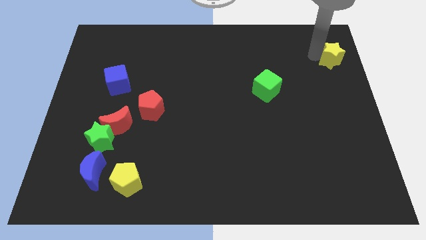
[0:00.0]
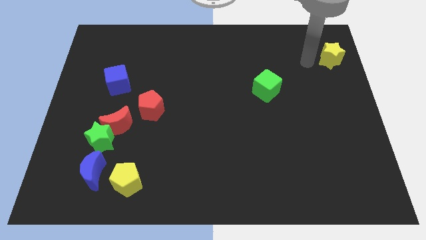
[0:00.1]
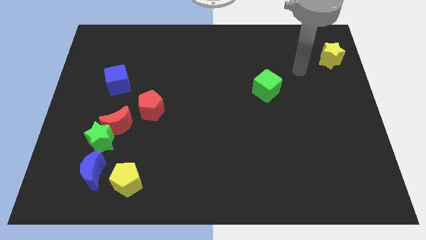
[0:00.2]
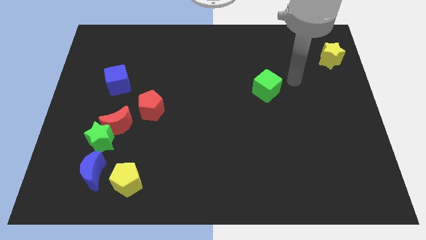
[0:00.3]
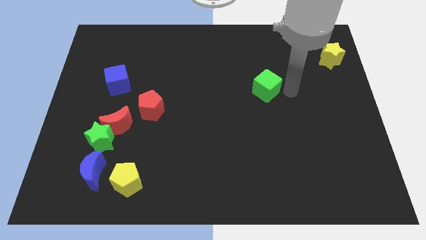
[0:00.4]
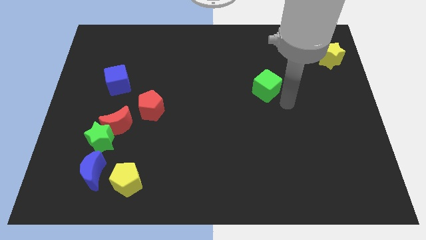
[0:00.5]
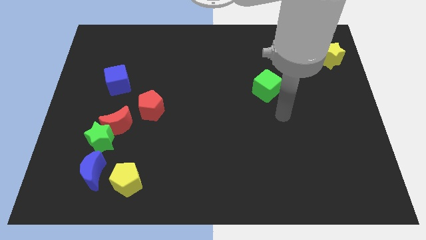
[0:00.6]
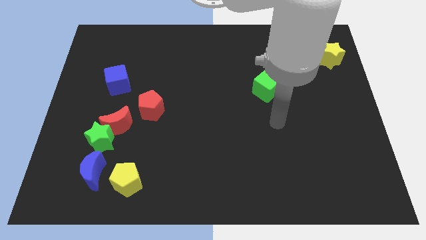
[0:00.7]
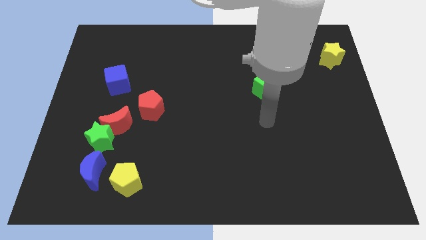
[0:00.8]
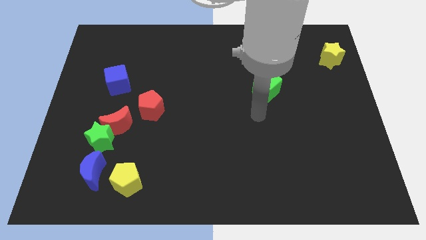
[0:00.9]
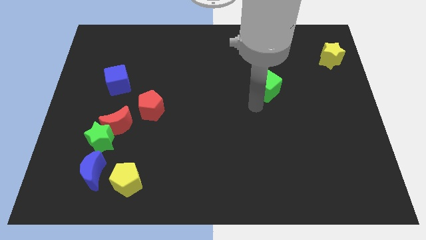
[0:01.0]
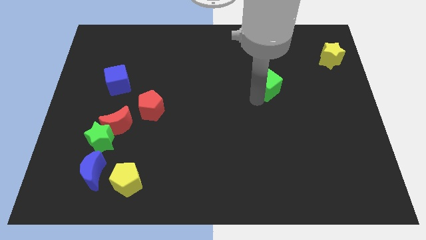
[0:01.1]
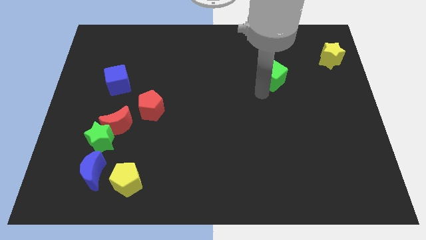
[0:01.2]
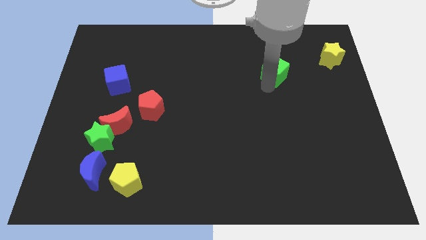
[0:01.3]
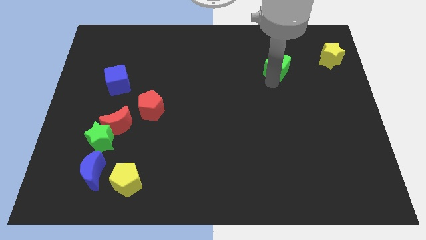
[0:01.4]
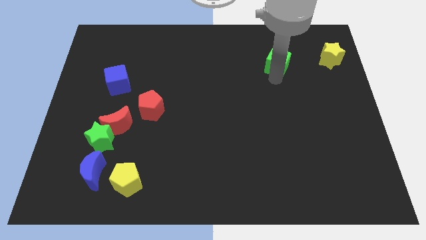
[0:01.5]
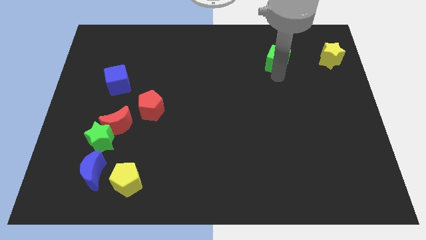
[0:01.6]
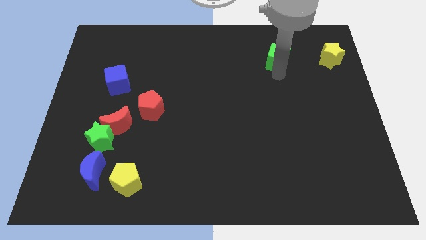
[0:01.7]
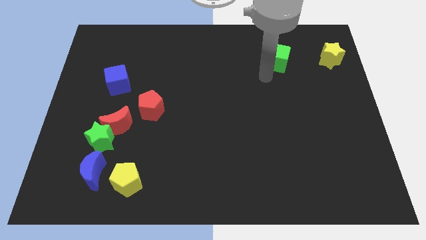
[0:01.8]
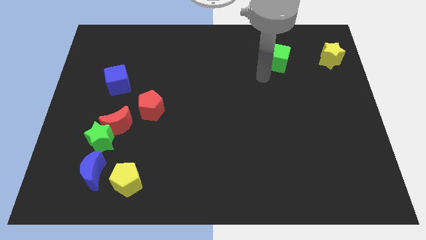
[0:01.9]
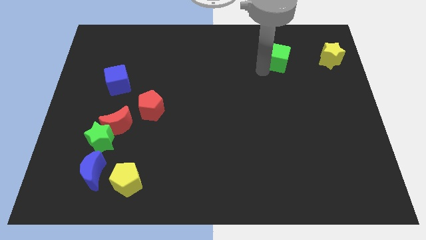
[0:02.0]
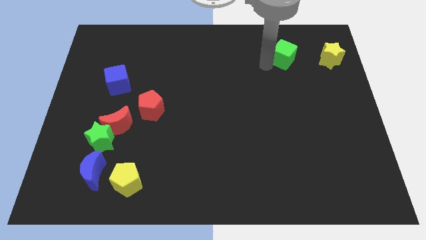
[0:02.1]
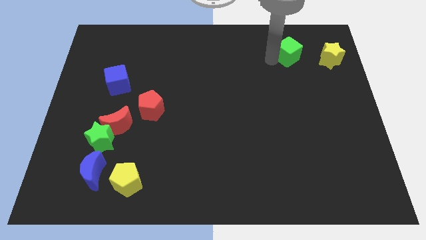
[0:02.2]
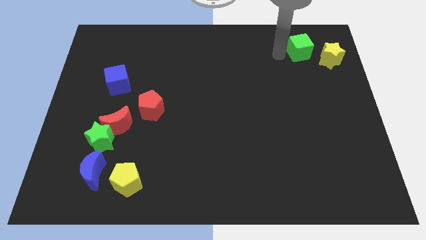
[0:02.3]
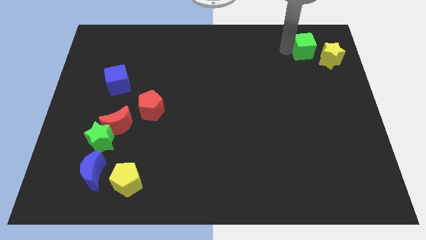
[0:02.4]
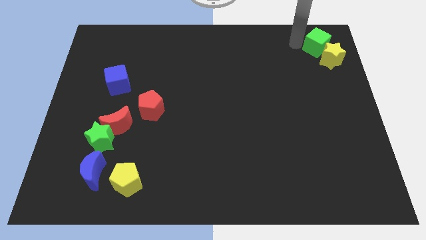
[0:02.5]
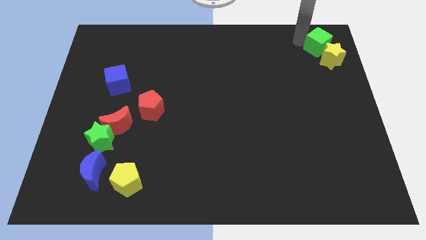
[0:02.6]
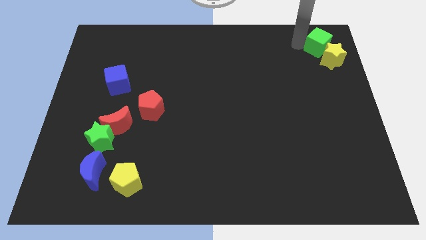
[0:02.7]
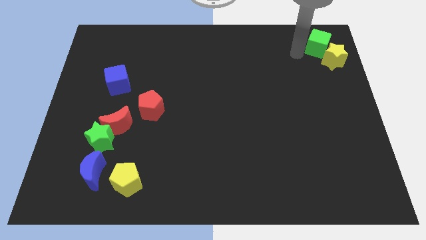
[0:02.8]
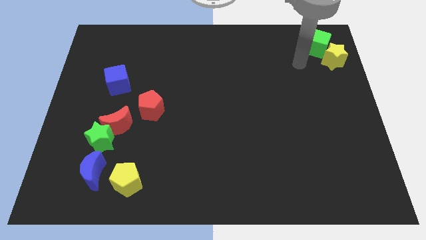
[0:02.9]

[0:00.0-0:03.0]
push the green cube into the yellow star

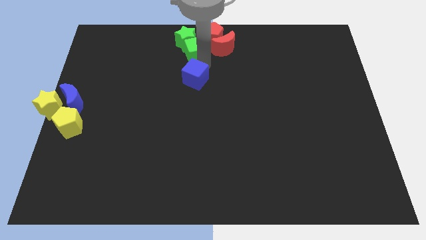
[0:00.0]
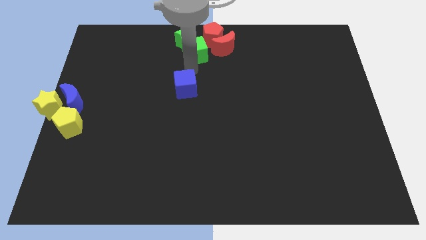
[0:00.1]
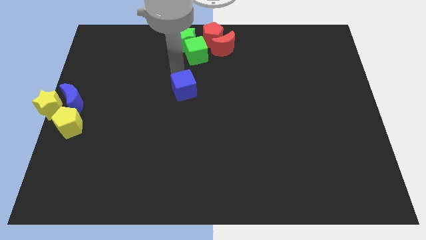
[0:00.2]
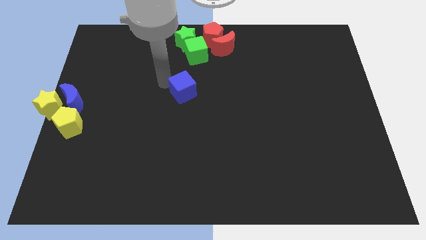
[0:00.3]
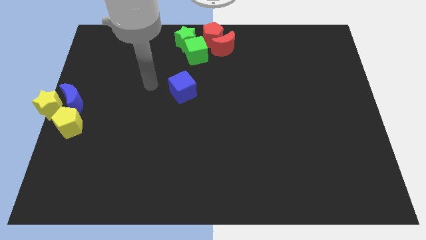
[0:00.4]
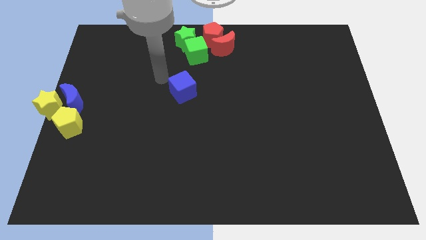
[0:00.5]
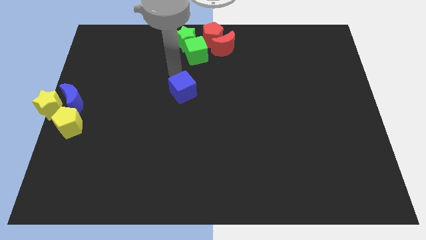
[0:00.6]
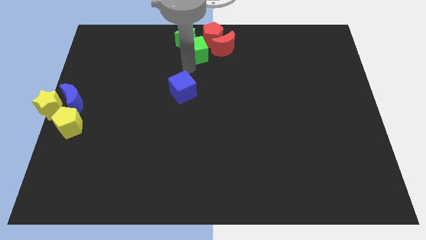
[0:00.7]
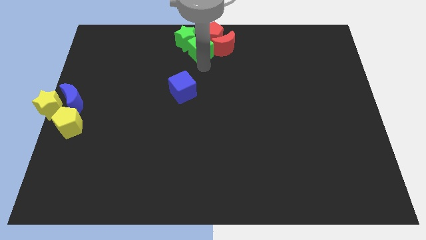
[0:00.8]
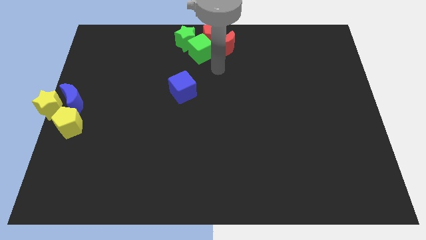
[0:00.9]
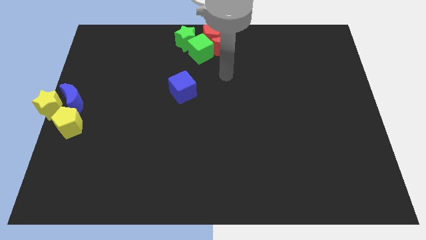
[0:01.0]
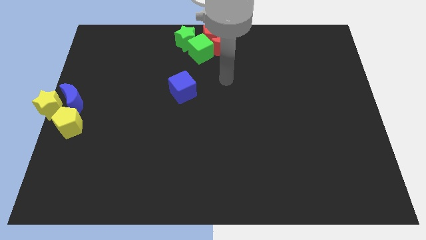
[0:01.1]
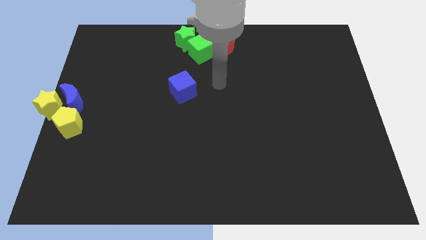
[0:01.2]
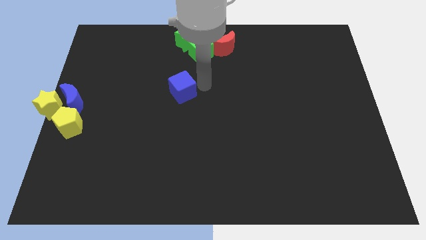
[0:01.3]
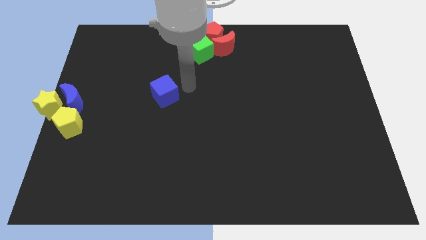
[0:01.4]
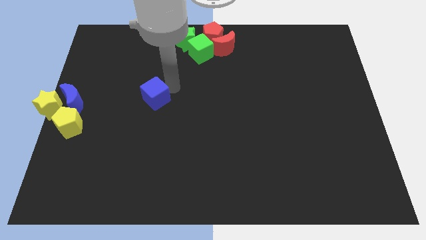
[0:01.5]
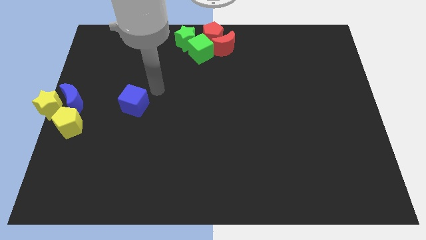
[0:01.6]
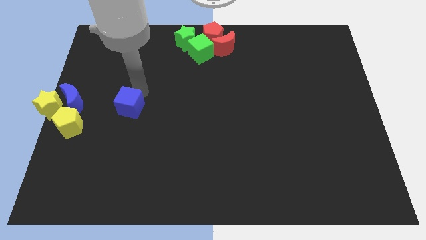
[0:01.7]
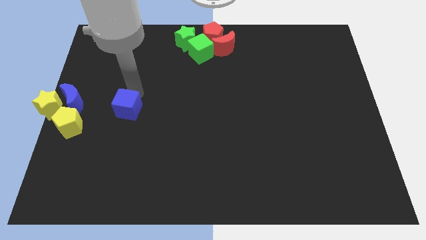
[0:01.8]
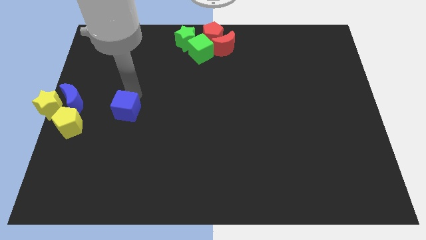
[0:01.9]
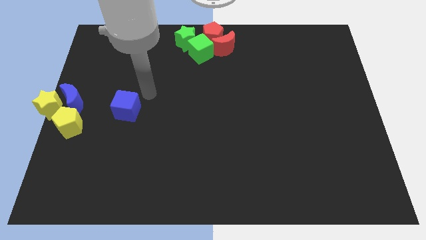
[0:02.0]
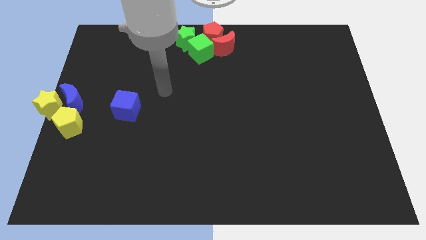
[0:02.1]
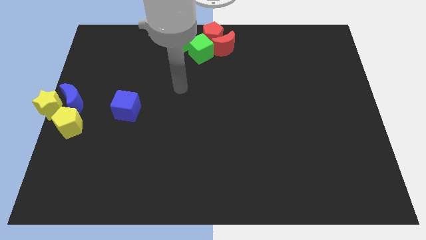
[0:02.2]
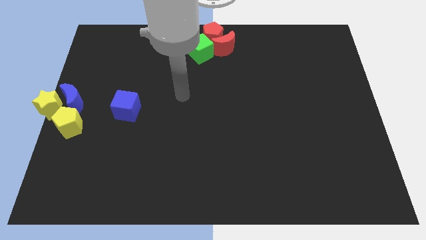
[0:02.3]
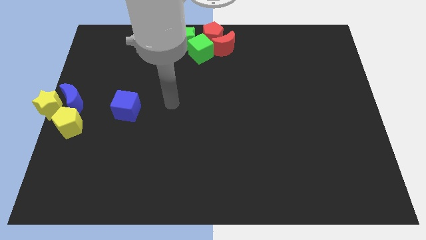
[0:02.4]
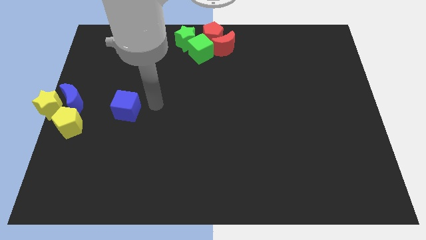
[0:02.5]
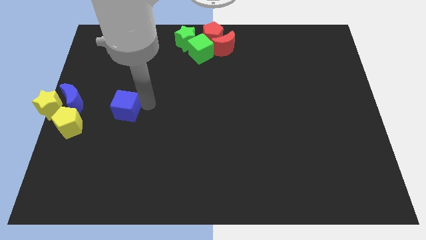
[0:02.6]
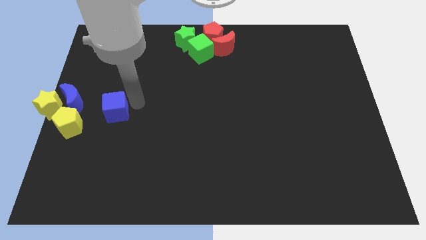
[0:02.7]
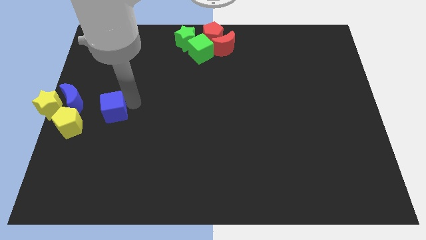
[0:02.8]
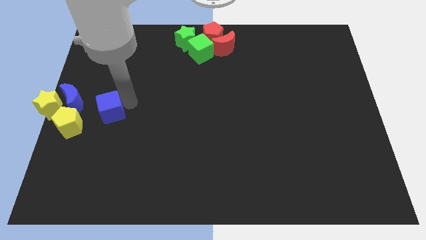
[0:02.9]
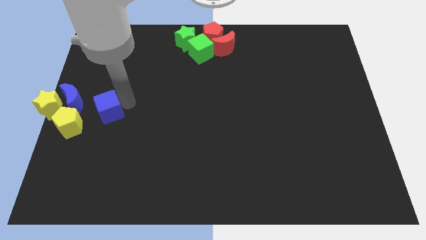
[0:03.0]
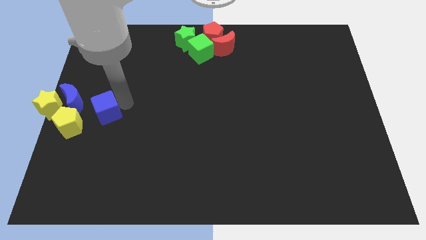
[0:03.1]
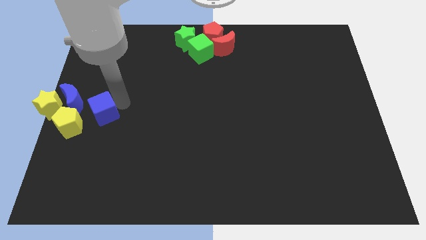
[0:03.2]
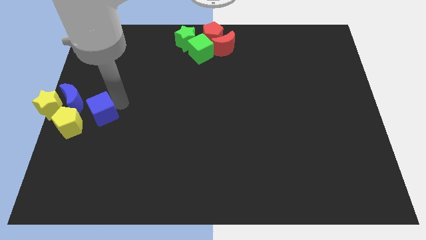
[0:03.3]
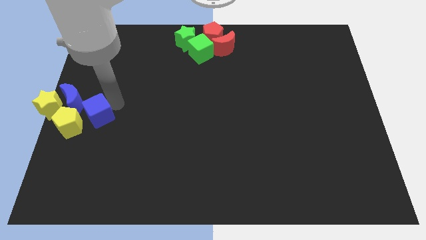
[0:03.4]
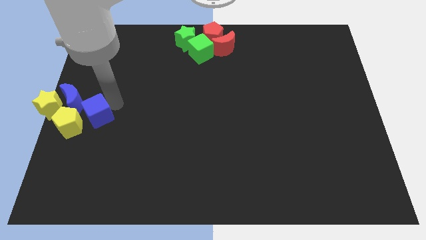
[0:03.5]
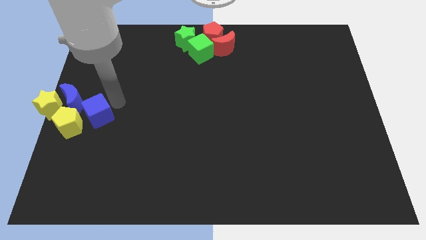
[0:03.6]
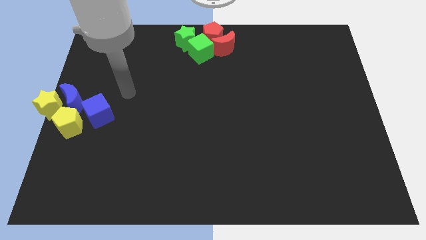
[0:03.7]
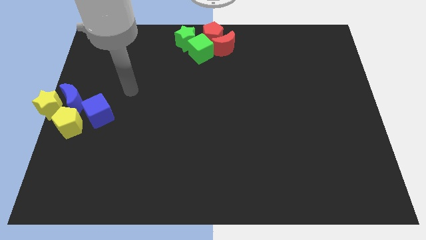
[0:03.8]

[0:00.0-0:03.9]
move blue cube diagonally above yellow pentagon

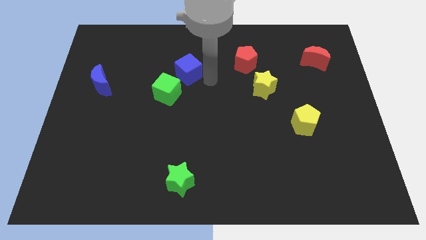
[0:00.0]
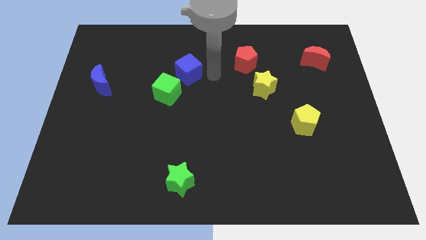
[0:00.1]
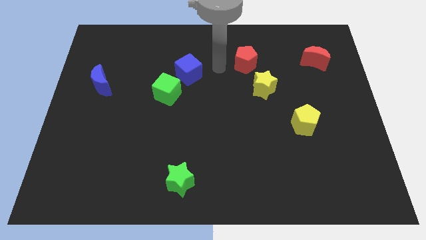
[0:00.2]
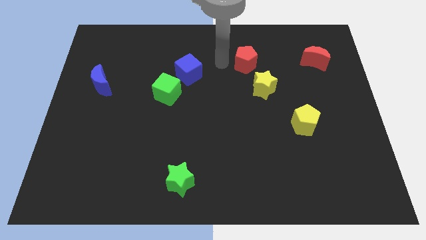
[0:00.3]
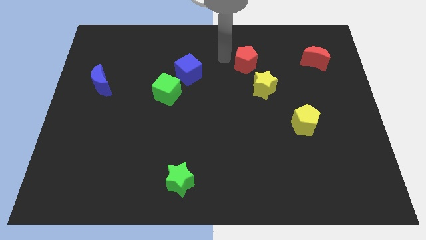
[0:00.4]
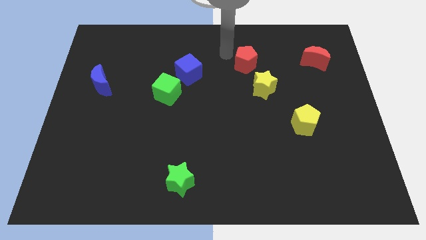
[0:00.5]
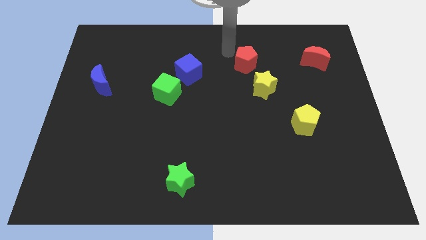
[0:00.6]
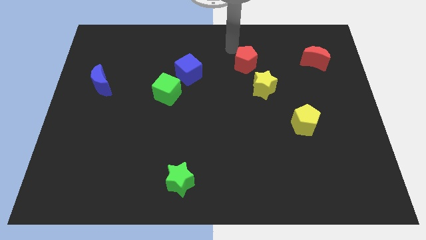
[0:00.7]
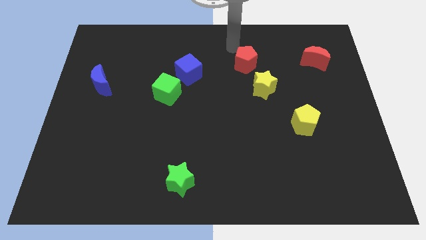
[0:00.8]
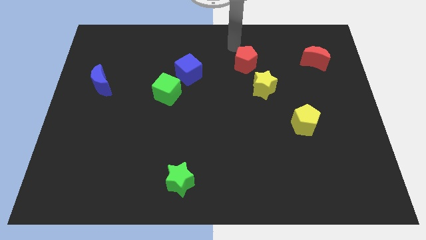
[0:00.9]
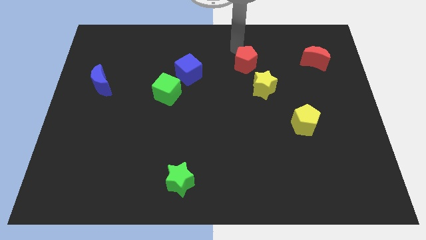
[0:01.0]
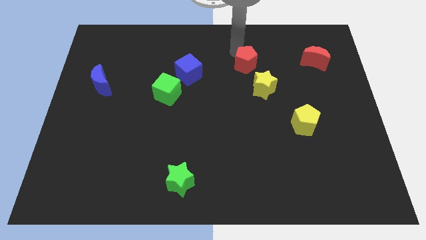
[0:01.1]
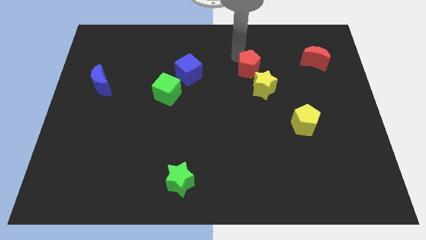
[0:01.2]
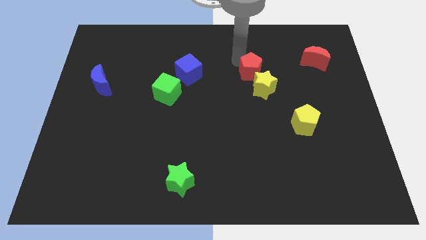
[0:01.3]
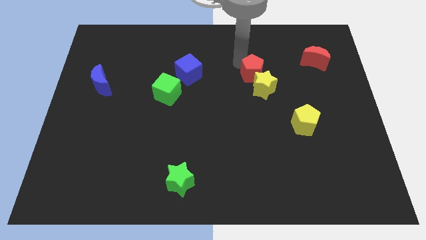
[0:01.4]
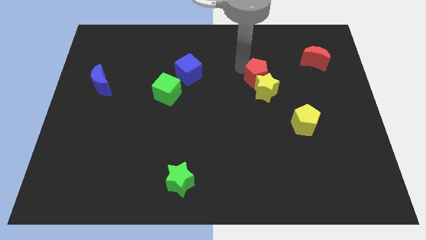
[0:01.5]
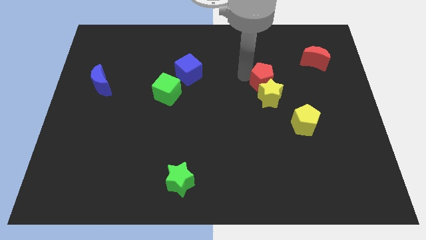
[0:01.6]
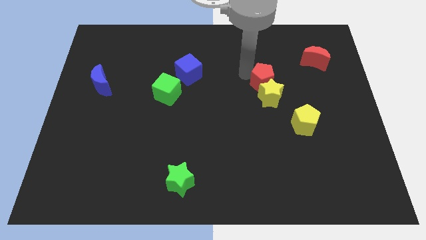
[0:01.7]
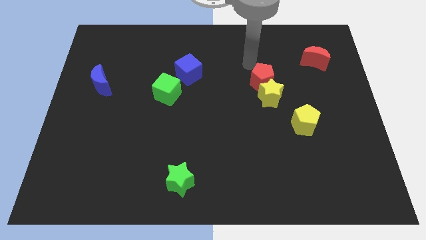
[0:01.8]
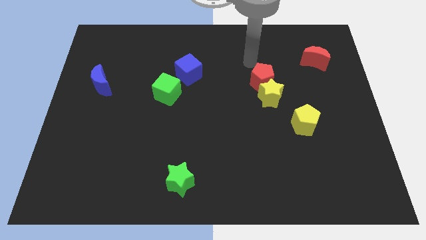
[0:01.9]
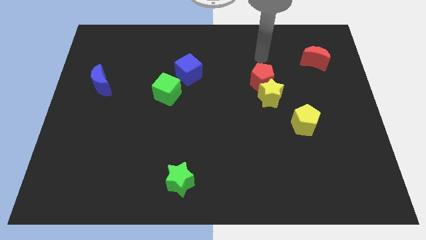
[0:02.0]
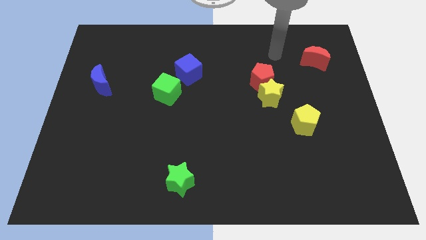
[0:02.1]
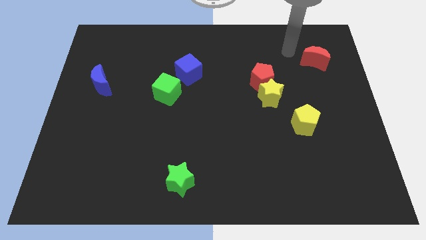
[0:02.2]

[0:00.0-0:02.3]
move your arm and put the red pentagon above the yellow star
